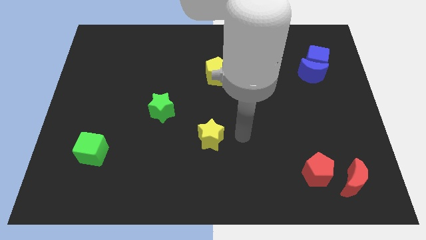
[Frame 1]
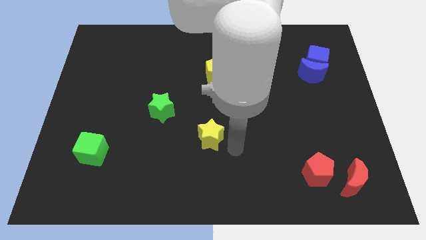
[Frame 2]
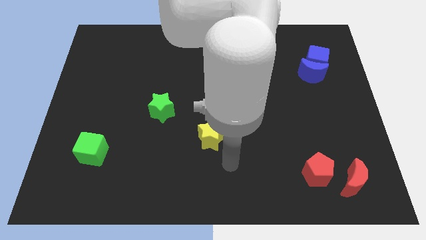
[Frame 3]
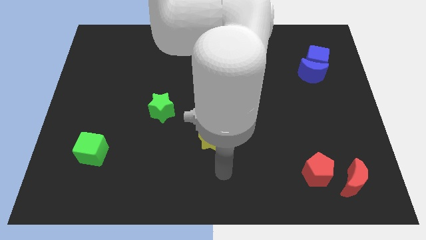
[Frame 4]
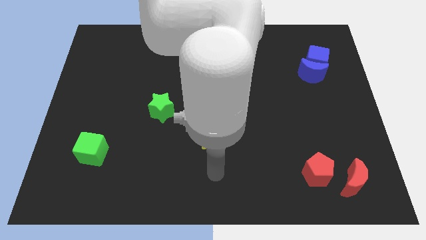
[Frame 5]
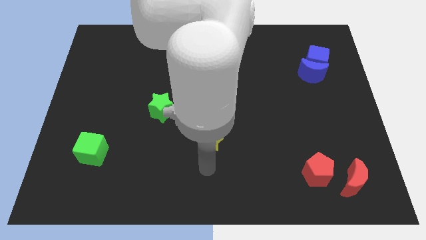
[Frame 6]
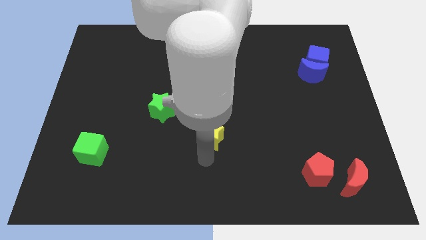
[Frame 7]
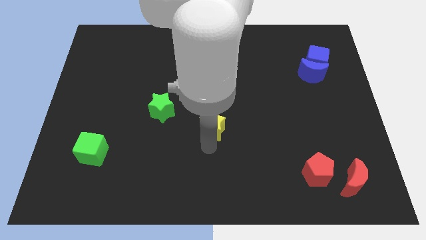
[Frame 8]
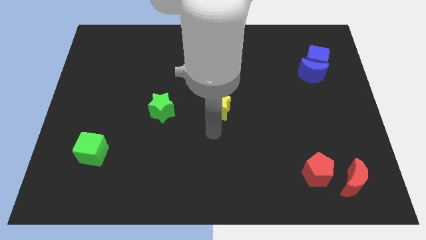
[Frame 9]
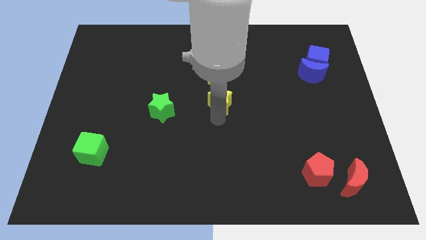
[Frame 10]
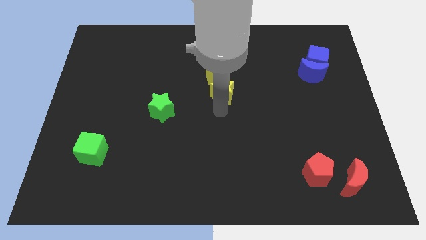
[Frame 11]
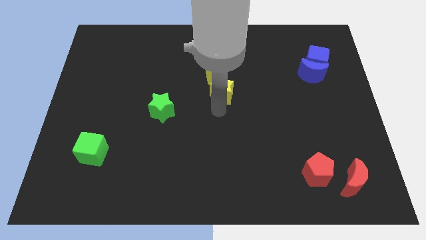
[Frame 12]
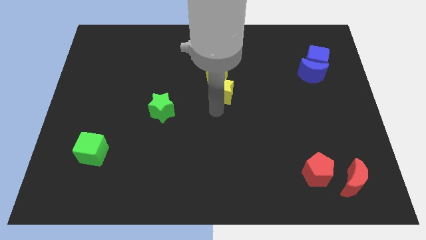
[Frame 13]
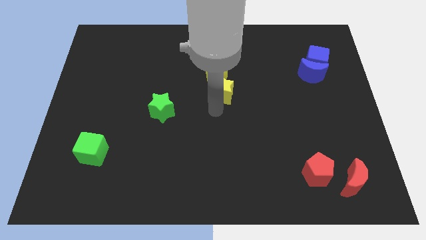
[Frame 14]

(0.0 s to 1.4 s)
push the yellow star close to the yellow pentagon

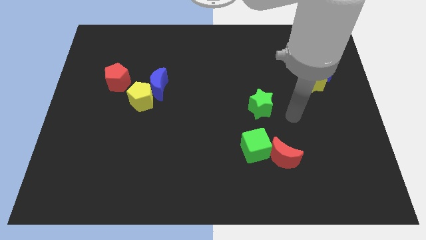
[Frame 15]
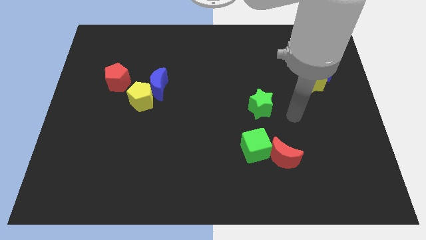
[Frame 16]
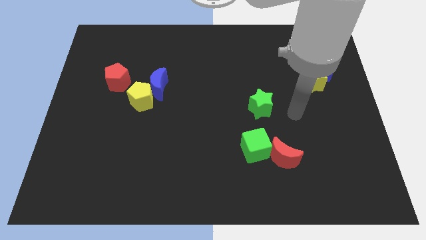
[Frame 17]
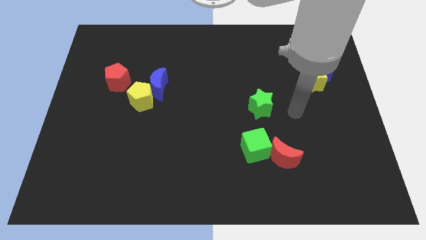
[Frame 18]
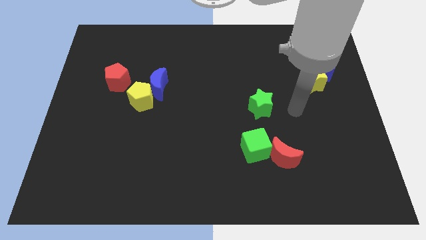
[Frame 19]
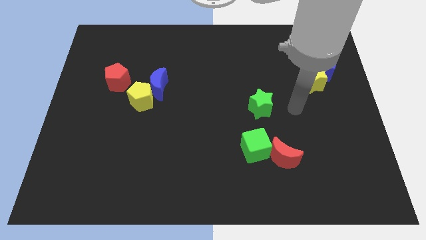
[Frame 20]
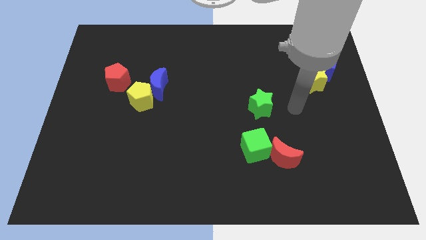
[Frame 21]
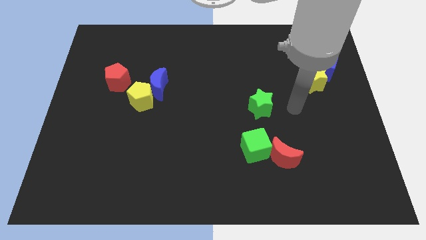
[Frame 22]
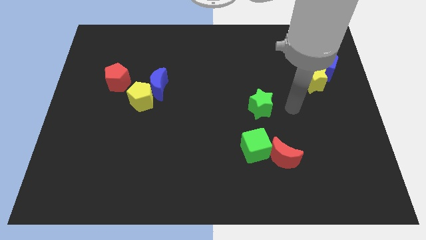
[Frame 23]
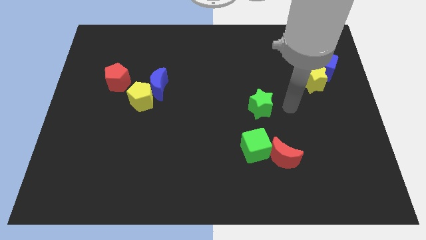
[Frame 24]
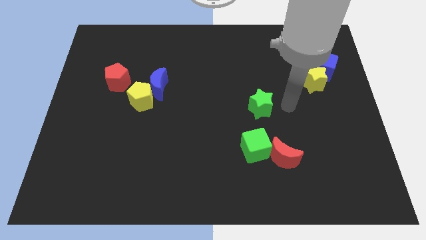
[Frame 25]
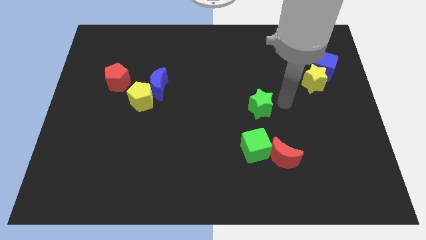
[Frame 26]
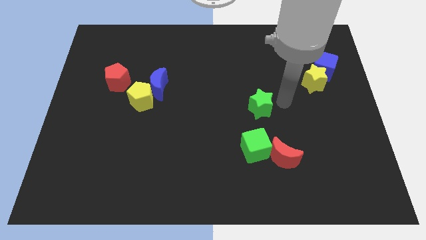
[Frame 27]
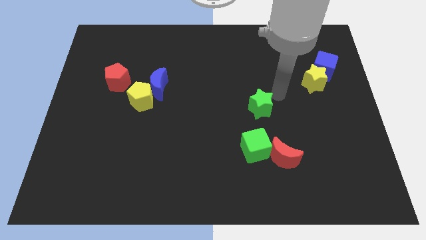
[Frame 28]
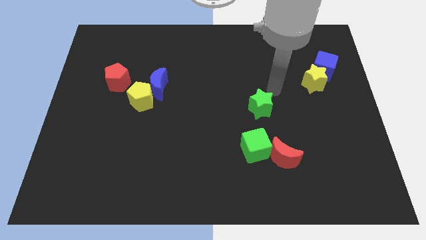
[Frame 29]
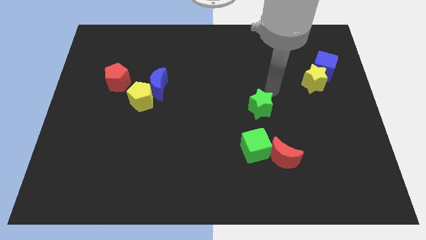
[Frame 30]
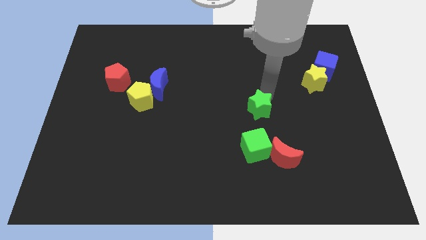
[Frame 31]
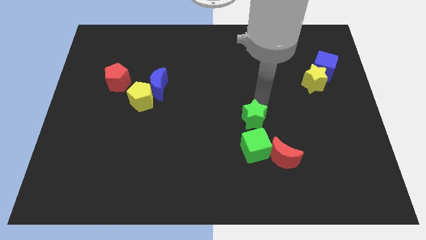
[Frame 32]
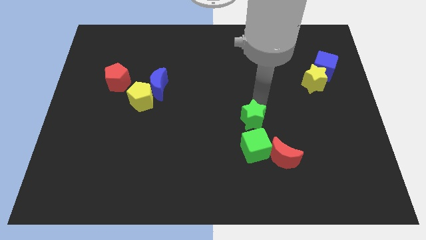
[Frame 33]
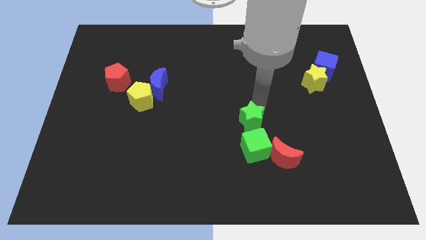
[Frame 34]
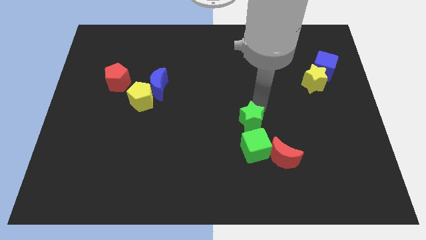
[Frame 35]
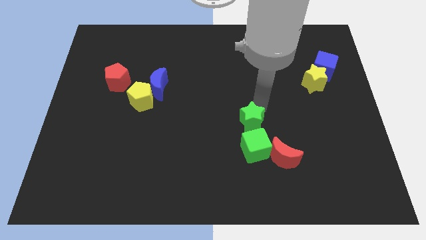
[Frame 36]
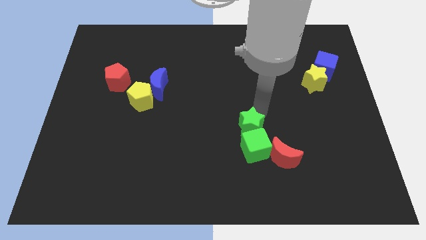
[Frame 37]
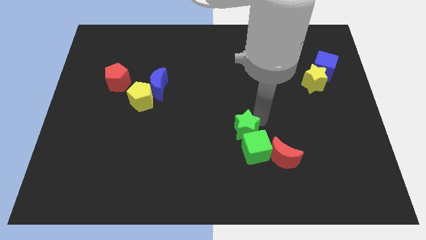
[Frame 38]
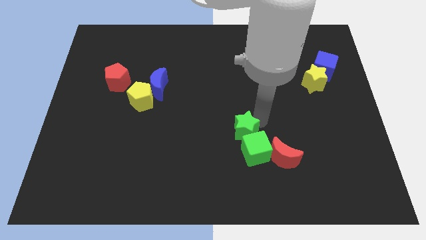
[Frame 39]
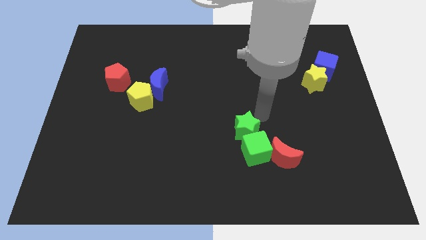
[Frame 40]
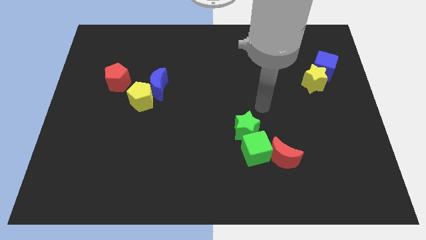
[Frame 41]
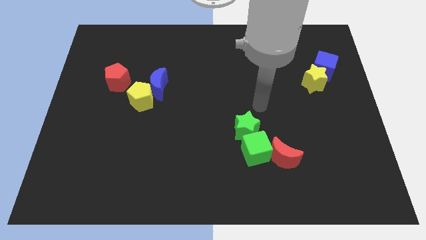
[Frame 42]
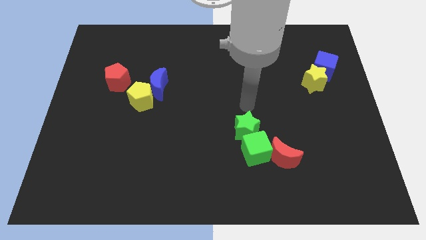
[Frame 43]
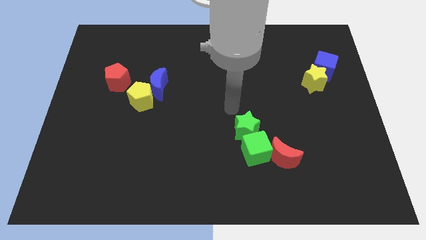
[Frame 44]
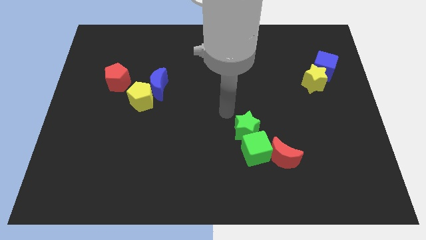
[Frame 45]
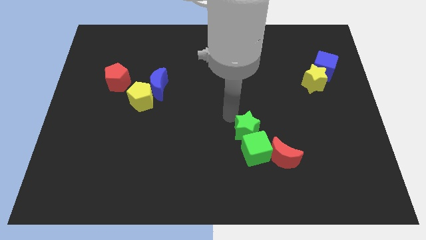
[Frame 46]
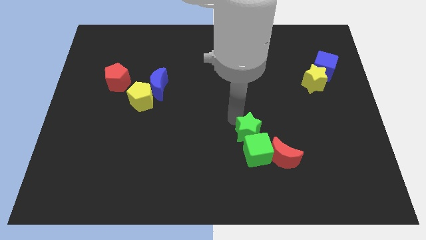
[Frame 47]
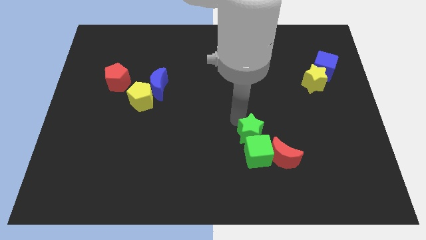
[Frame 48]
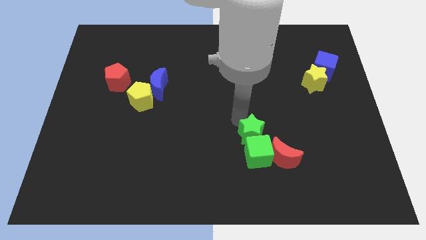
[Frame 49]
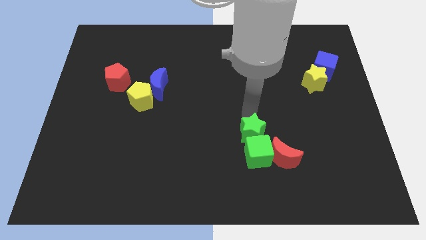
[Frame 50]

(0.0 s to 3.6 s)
move green star into the top side of the green cube

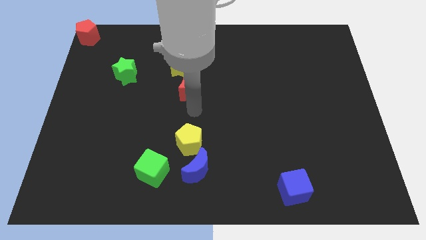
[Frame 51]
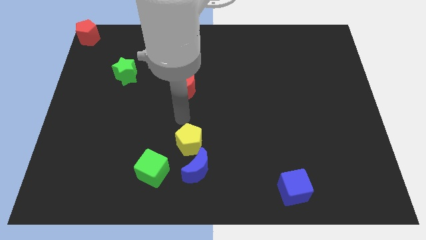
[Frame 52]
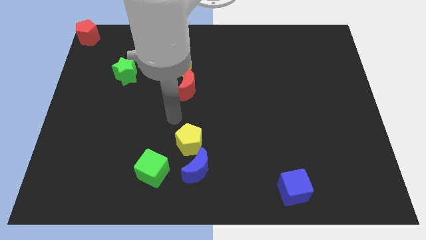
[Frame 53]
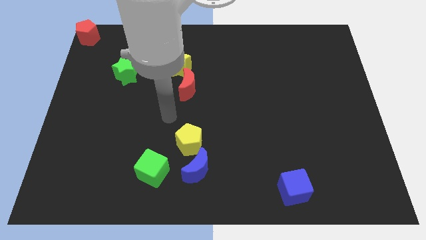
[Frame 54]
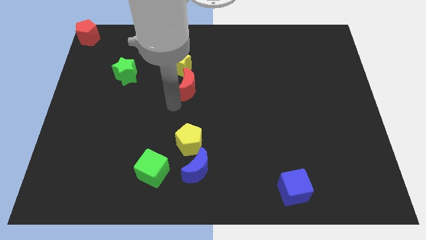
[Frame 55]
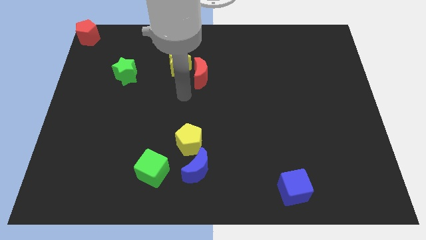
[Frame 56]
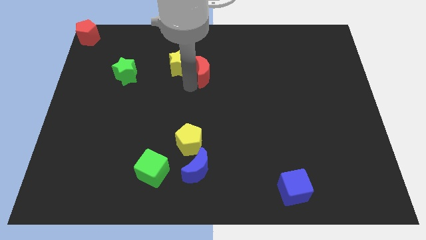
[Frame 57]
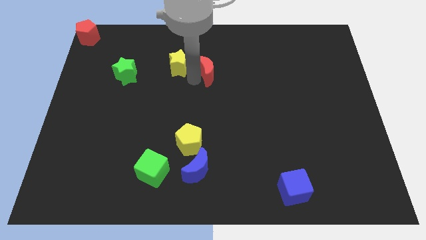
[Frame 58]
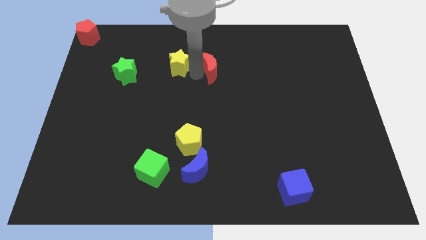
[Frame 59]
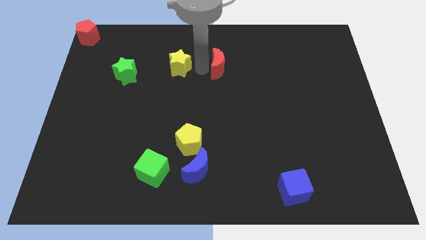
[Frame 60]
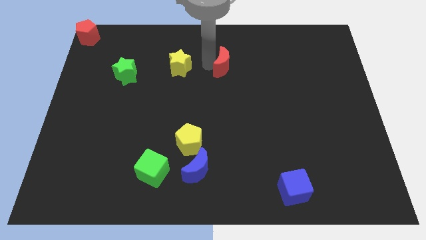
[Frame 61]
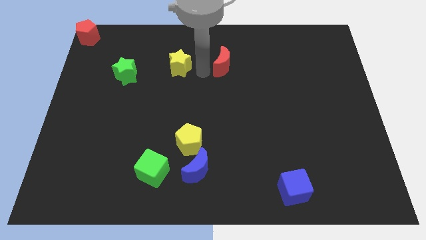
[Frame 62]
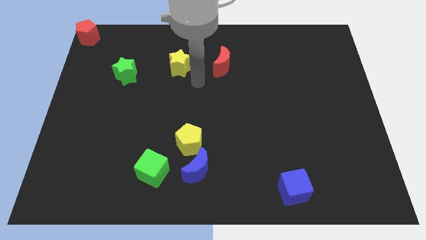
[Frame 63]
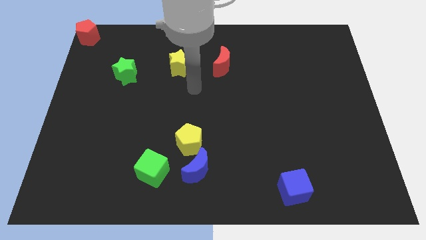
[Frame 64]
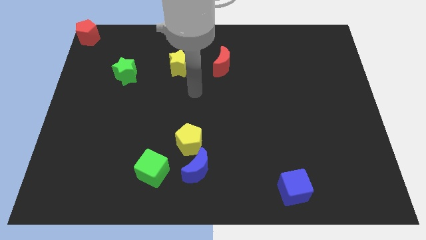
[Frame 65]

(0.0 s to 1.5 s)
push the red moon to the right side of the yellow star

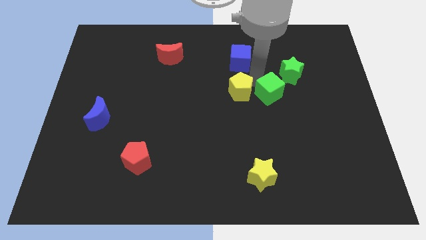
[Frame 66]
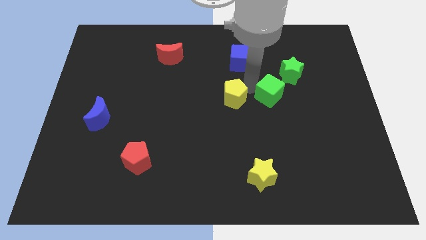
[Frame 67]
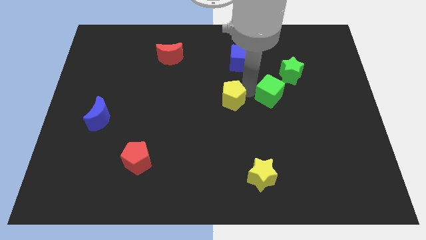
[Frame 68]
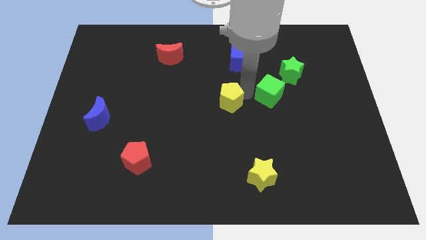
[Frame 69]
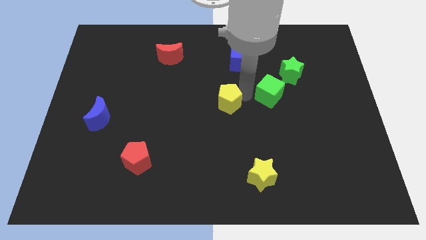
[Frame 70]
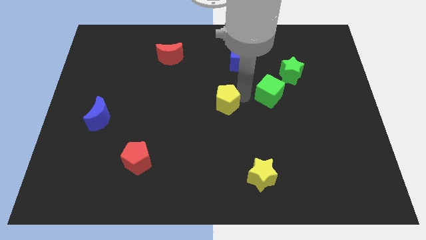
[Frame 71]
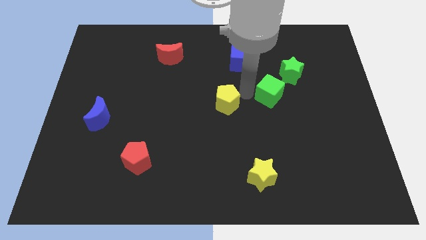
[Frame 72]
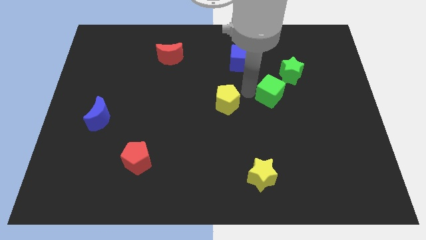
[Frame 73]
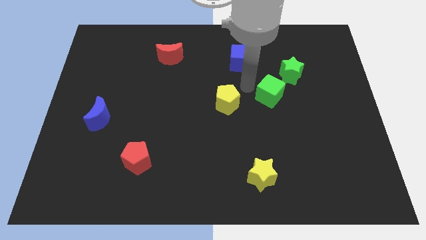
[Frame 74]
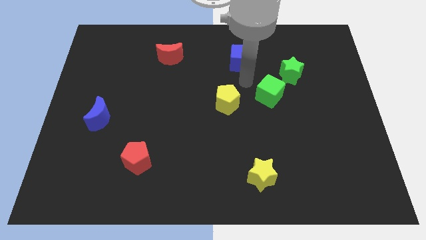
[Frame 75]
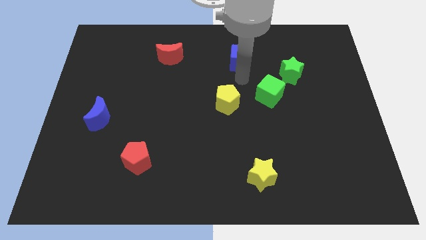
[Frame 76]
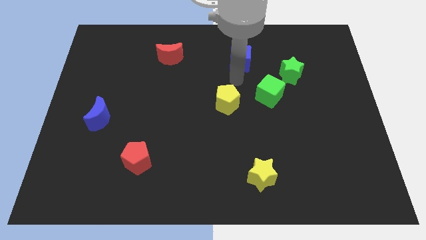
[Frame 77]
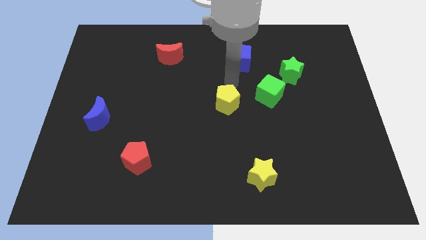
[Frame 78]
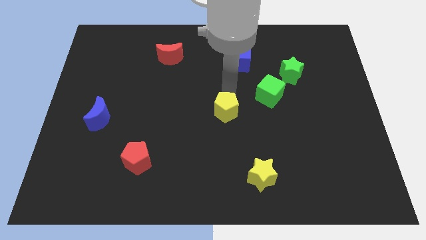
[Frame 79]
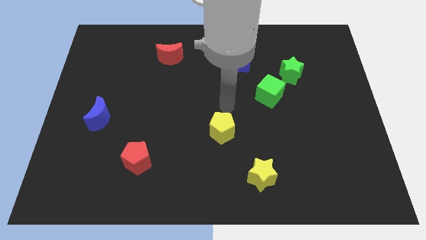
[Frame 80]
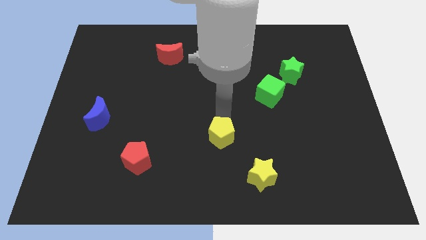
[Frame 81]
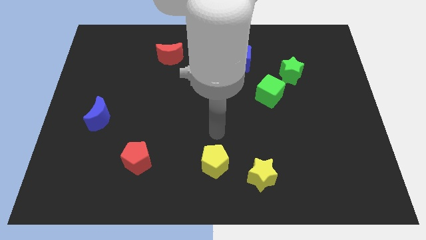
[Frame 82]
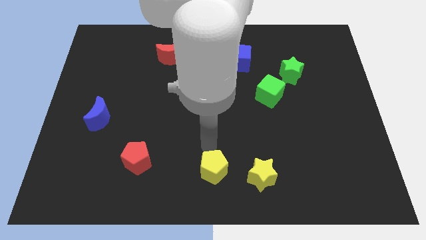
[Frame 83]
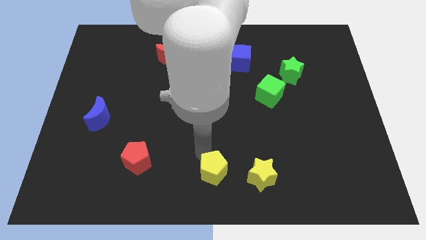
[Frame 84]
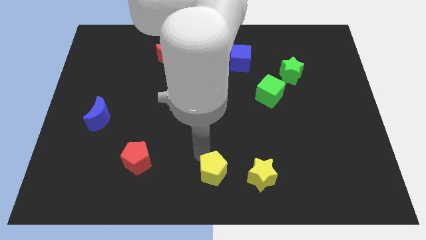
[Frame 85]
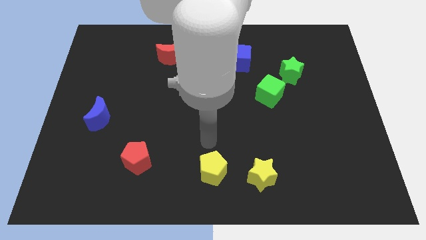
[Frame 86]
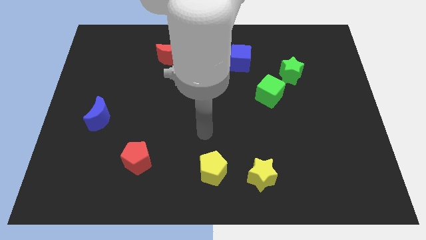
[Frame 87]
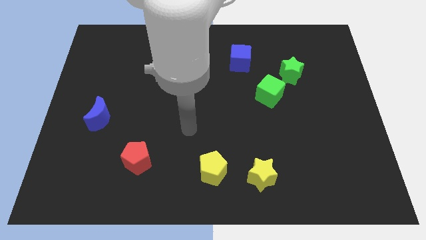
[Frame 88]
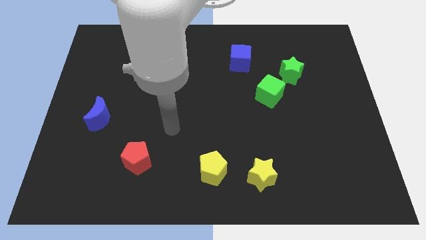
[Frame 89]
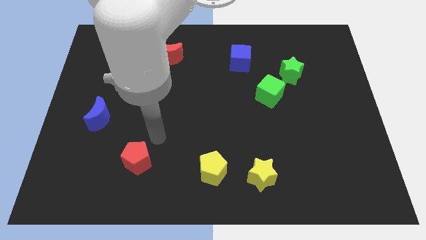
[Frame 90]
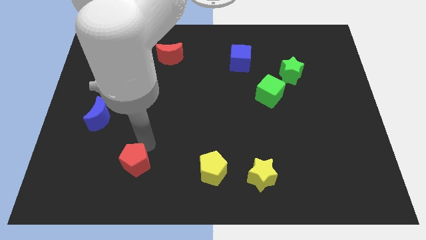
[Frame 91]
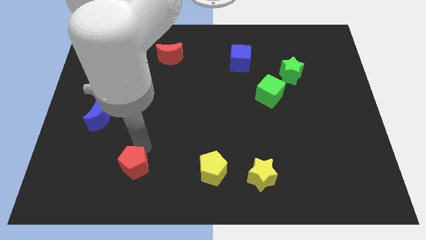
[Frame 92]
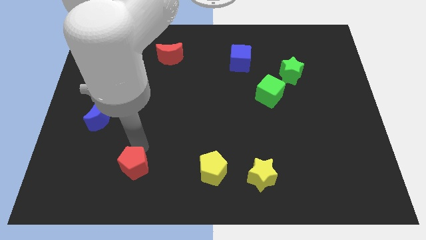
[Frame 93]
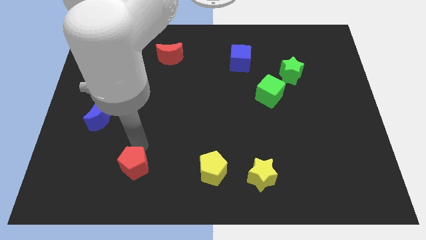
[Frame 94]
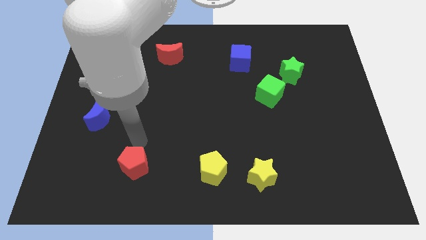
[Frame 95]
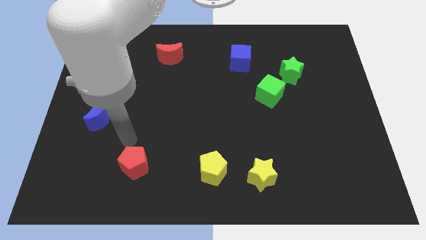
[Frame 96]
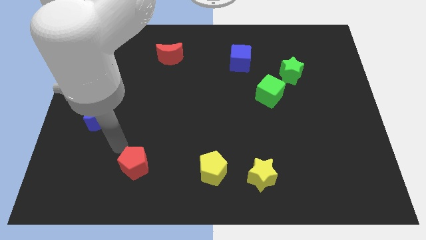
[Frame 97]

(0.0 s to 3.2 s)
slide the yellow pentagon towards down
